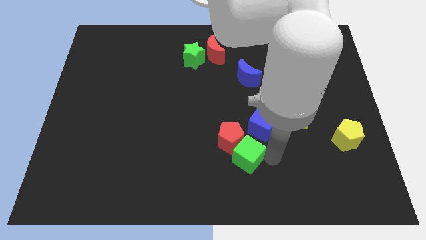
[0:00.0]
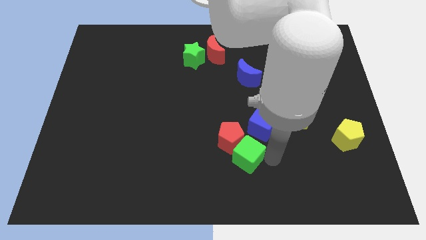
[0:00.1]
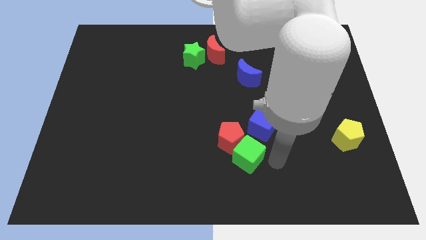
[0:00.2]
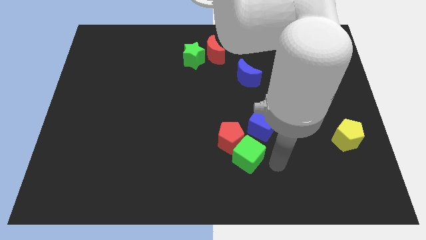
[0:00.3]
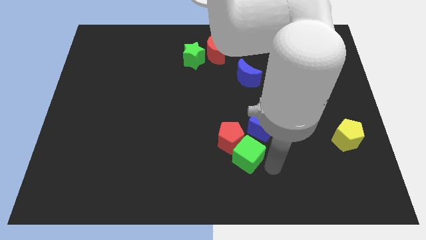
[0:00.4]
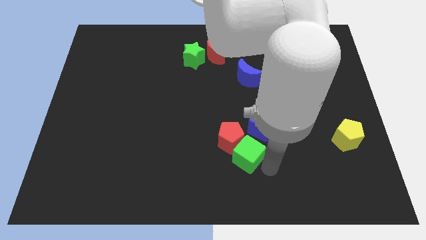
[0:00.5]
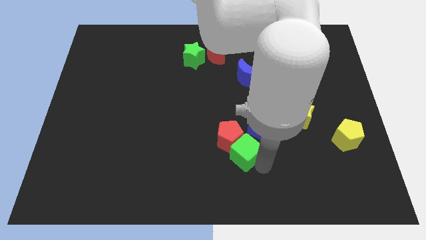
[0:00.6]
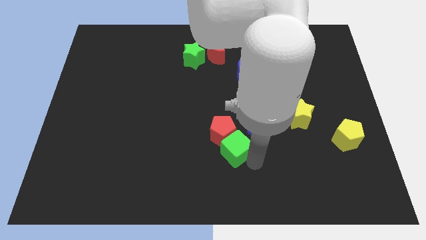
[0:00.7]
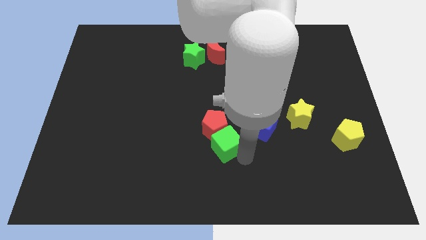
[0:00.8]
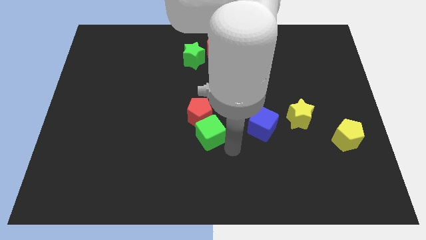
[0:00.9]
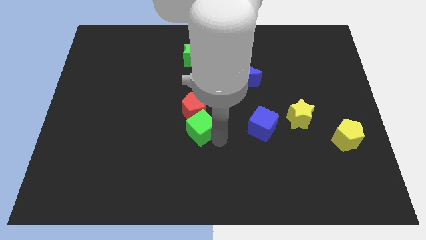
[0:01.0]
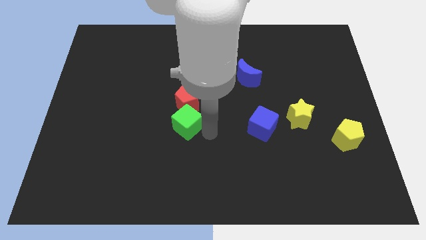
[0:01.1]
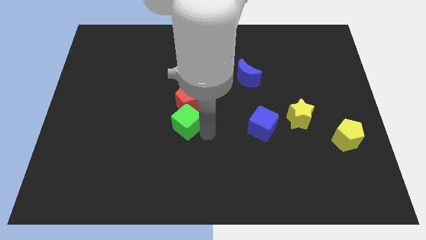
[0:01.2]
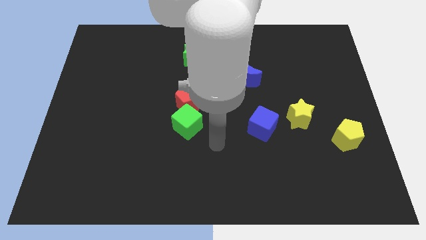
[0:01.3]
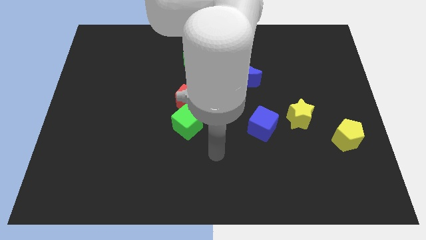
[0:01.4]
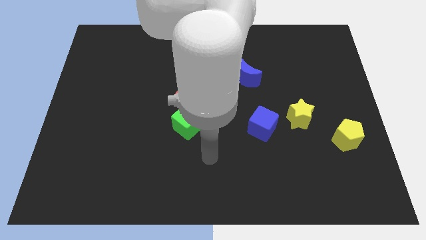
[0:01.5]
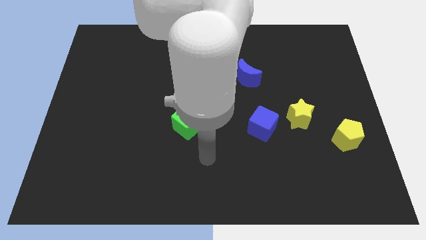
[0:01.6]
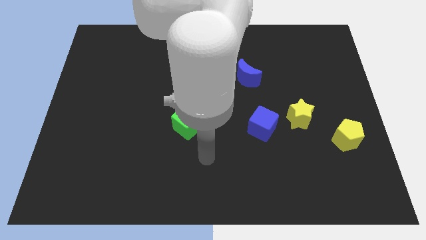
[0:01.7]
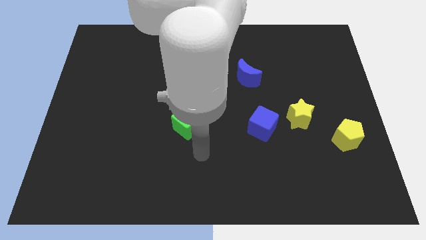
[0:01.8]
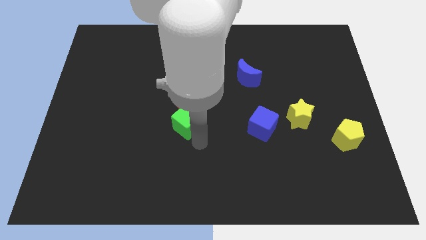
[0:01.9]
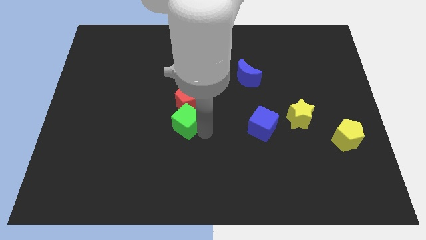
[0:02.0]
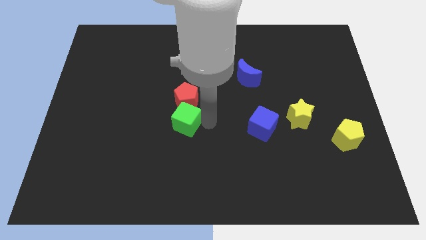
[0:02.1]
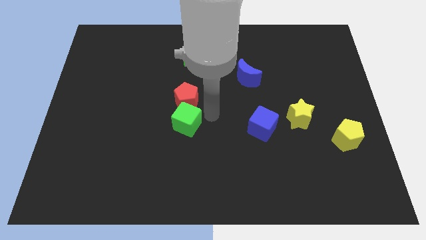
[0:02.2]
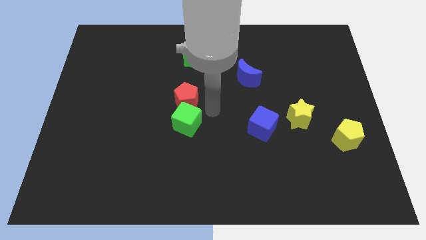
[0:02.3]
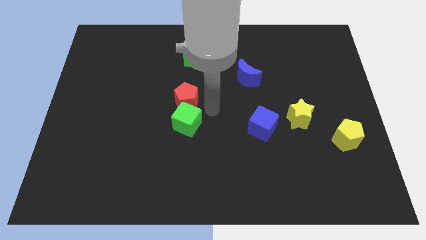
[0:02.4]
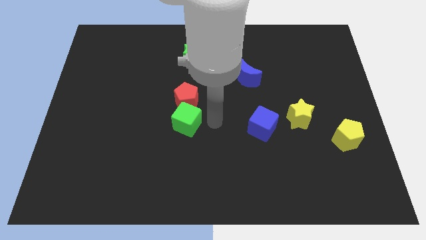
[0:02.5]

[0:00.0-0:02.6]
push red pentagon and green cube to the center of the board

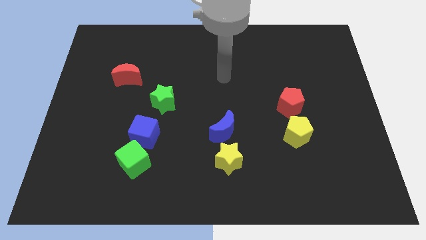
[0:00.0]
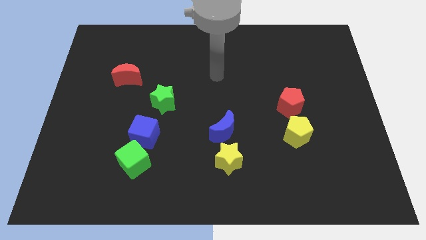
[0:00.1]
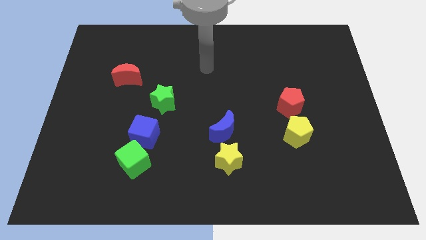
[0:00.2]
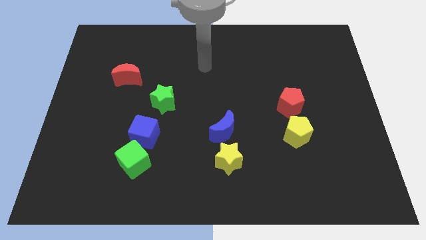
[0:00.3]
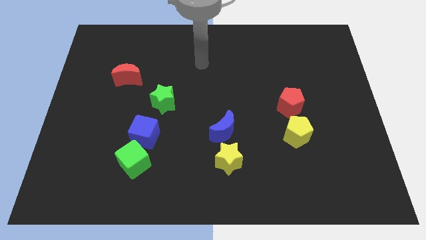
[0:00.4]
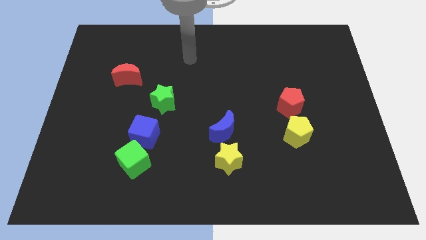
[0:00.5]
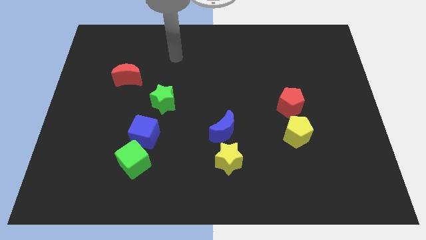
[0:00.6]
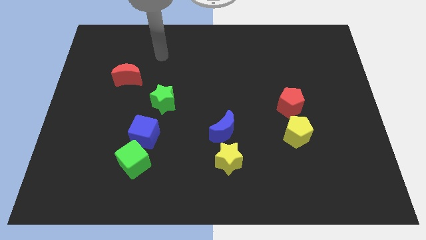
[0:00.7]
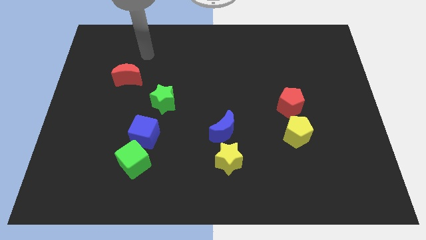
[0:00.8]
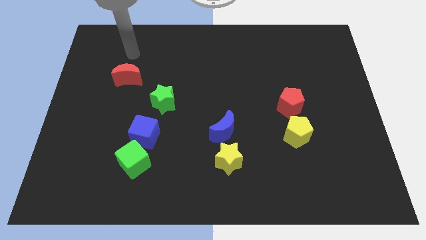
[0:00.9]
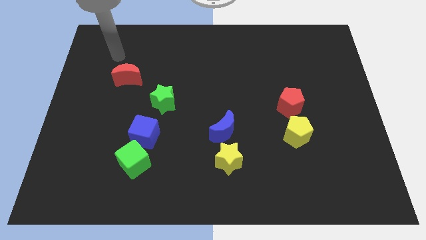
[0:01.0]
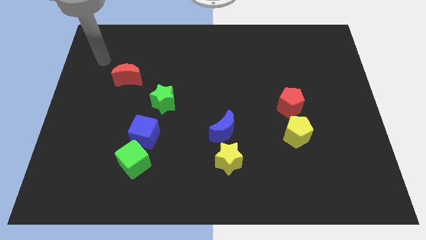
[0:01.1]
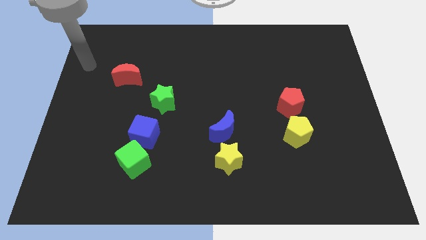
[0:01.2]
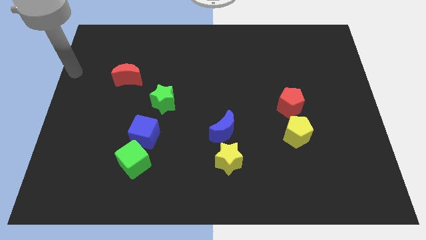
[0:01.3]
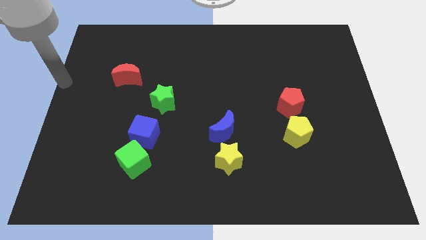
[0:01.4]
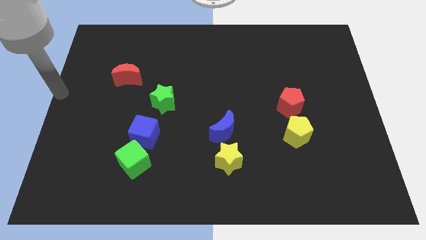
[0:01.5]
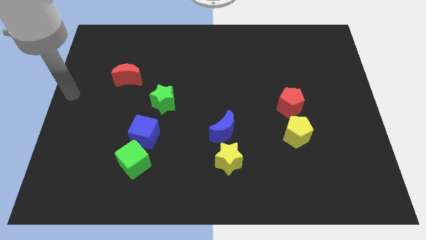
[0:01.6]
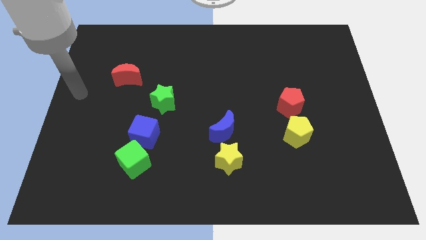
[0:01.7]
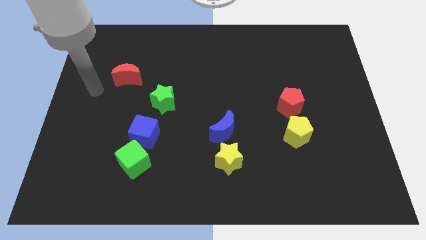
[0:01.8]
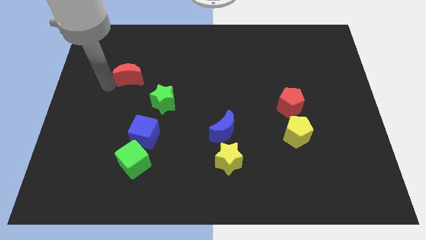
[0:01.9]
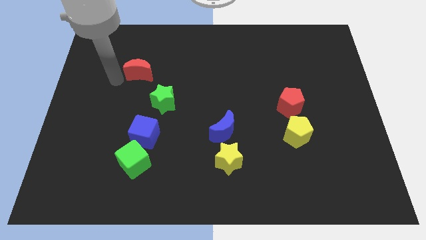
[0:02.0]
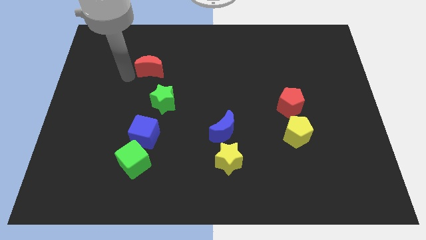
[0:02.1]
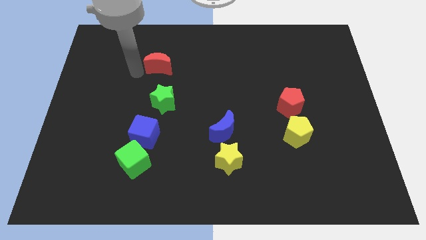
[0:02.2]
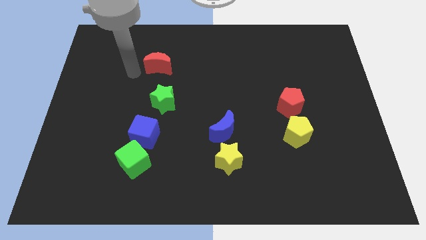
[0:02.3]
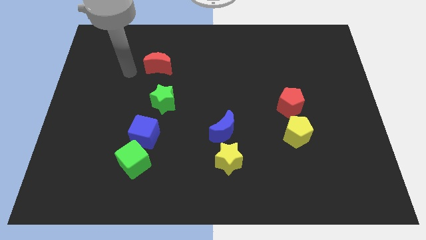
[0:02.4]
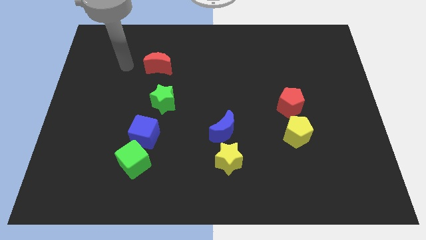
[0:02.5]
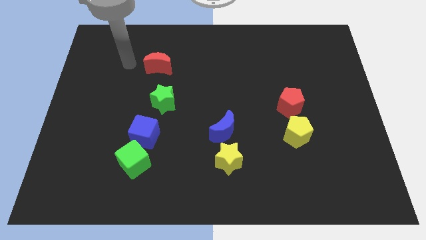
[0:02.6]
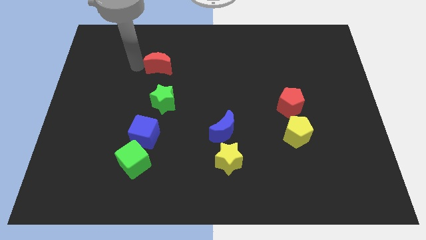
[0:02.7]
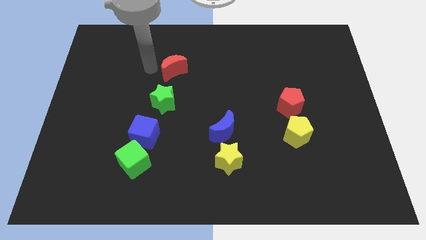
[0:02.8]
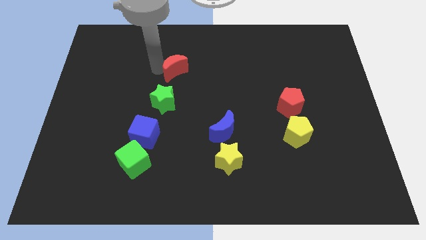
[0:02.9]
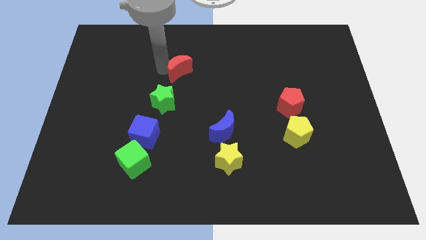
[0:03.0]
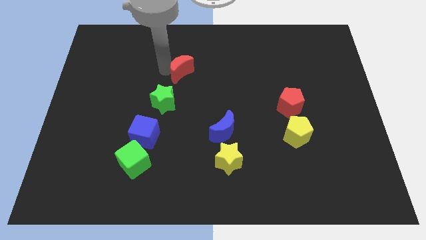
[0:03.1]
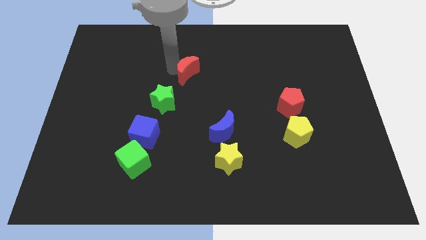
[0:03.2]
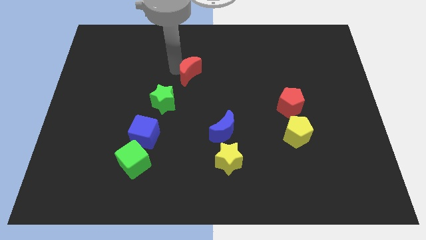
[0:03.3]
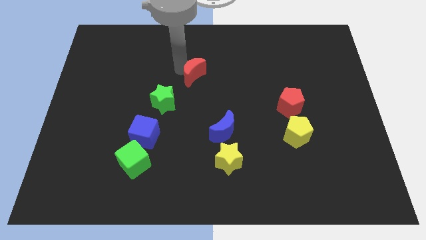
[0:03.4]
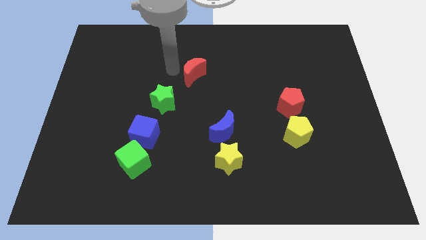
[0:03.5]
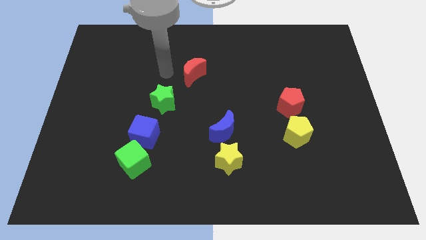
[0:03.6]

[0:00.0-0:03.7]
push the red crescent to the right of the board

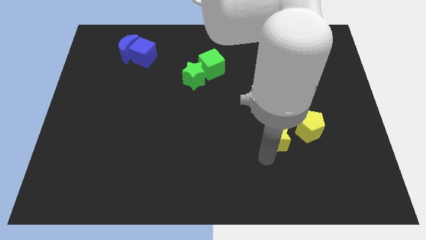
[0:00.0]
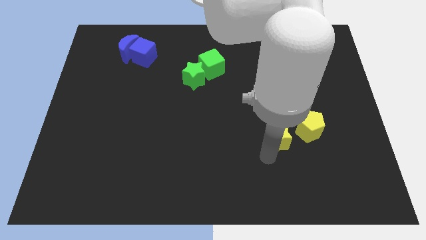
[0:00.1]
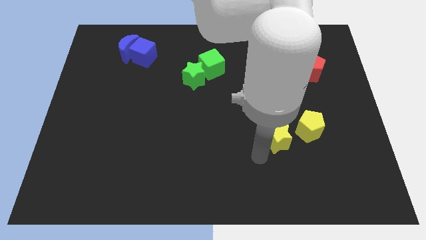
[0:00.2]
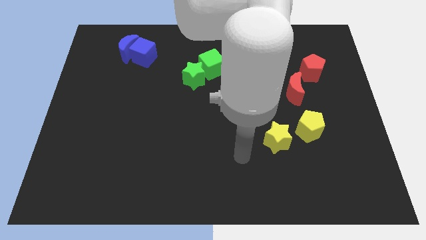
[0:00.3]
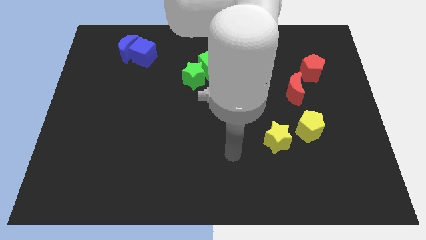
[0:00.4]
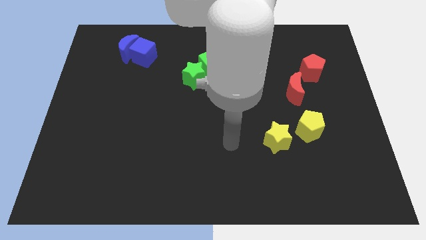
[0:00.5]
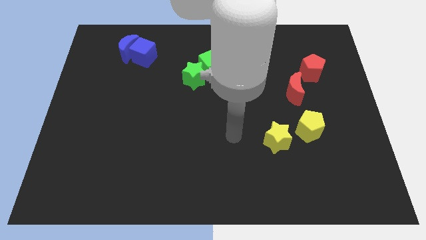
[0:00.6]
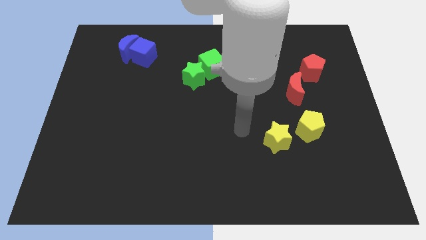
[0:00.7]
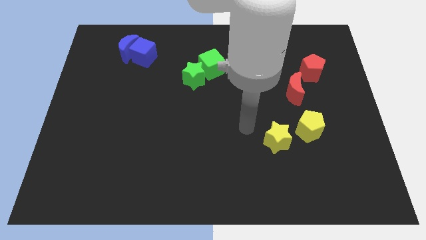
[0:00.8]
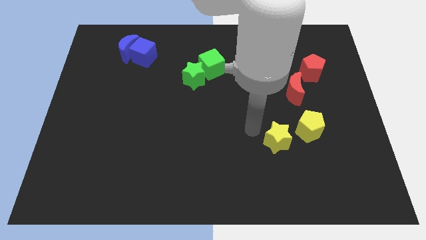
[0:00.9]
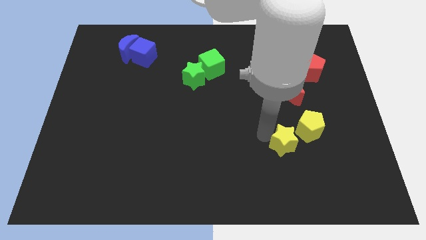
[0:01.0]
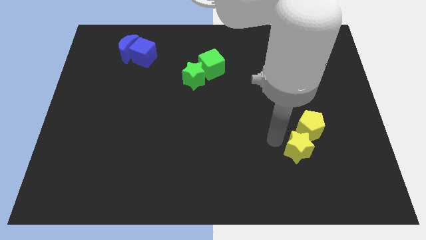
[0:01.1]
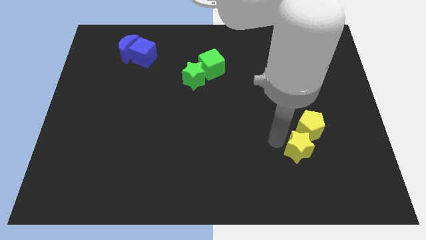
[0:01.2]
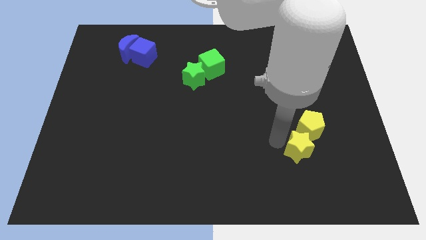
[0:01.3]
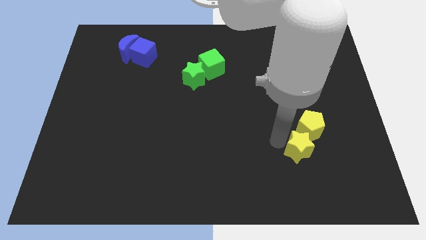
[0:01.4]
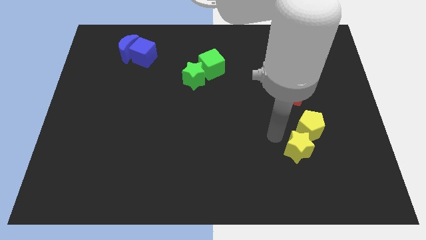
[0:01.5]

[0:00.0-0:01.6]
move the yellow star to the bottom left of the yellow pentagon

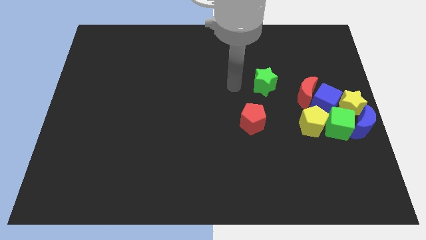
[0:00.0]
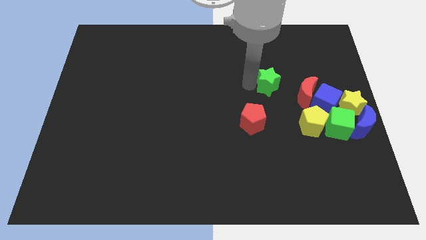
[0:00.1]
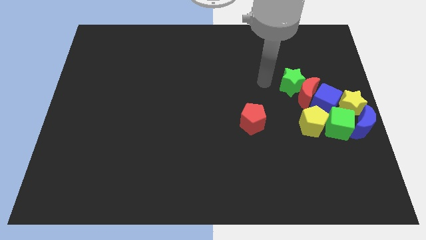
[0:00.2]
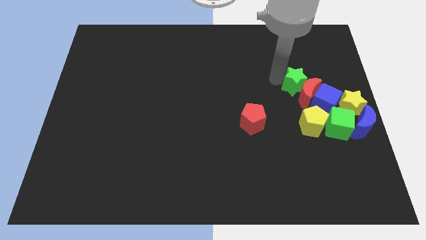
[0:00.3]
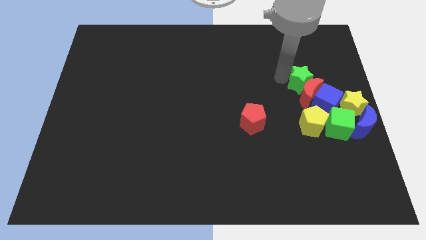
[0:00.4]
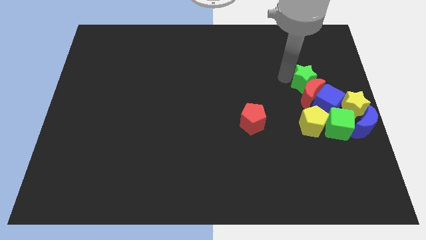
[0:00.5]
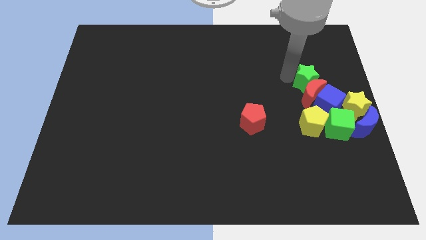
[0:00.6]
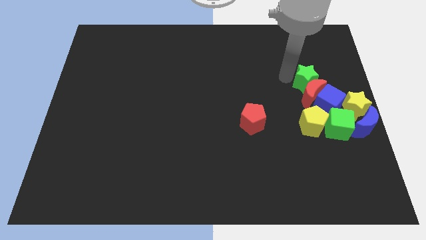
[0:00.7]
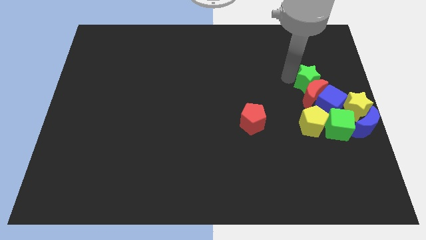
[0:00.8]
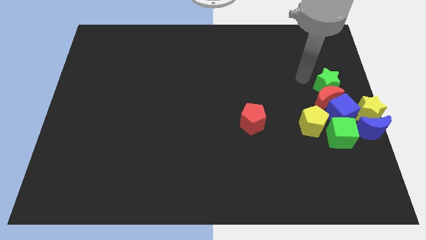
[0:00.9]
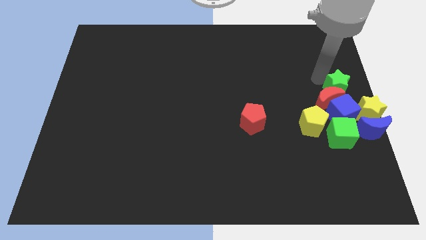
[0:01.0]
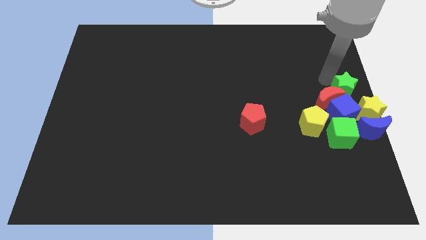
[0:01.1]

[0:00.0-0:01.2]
push the green star into the group of blocks
